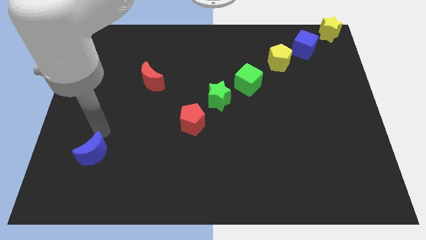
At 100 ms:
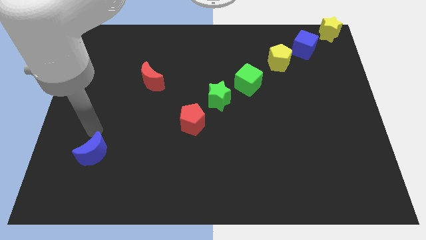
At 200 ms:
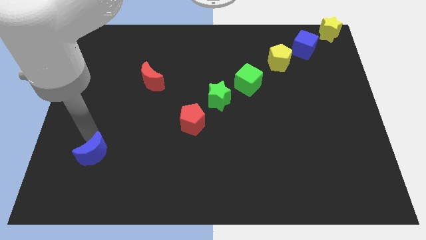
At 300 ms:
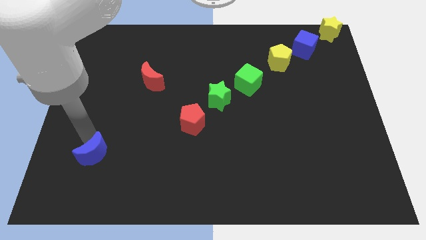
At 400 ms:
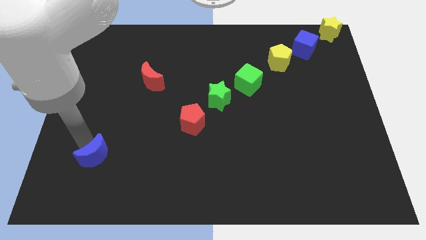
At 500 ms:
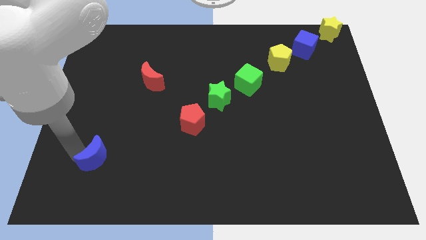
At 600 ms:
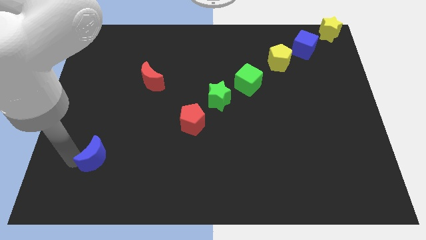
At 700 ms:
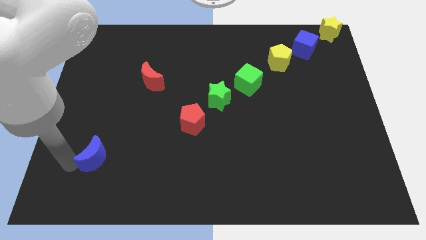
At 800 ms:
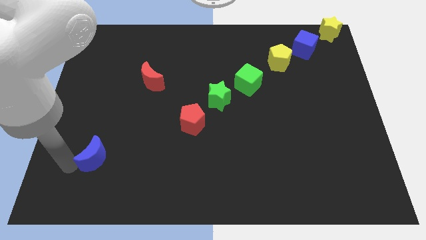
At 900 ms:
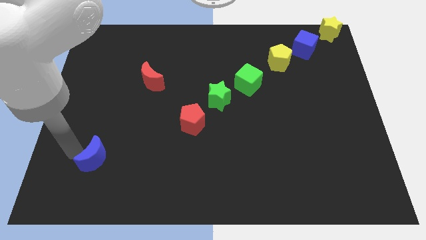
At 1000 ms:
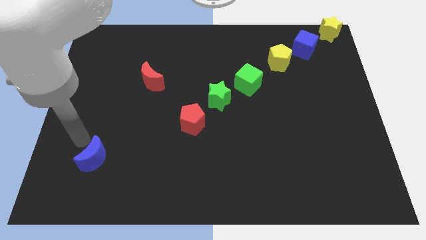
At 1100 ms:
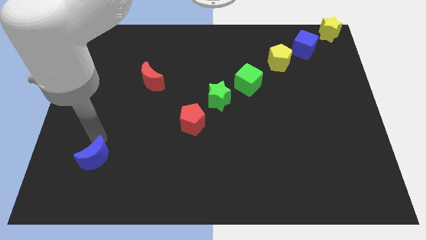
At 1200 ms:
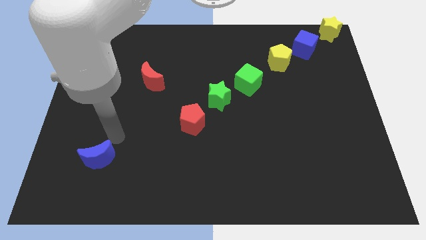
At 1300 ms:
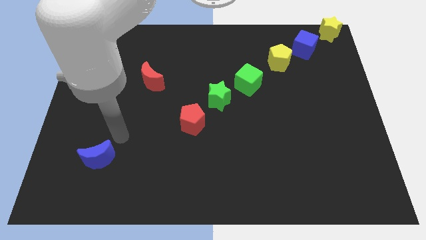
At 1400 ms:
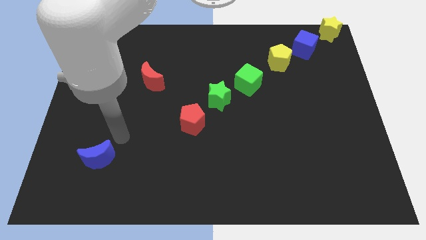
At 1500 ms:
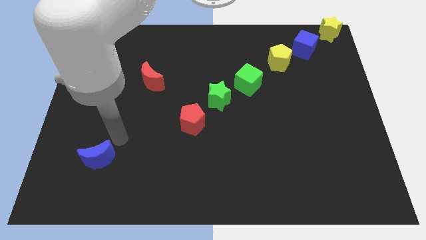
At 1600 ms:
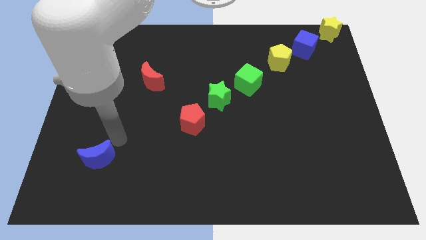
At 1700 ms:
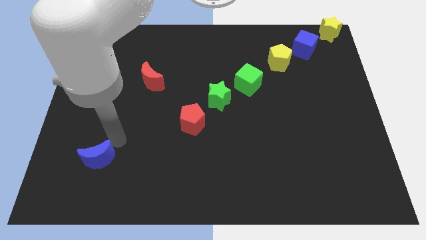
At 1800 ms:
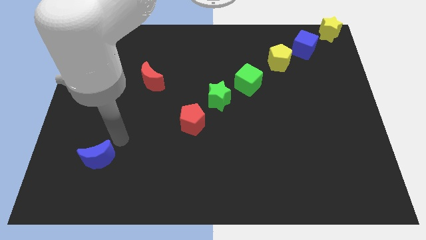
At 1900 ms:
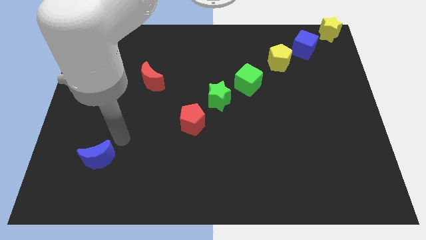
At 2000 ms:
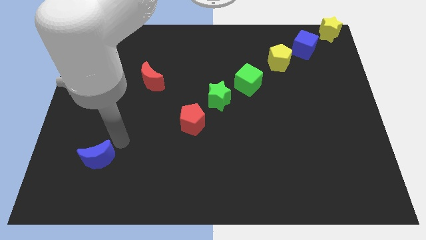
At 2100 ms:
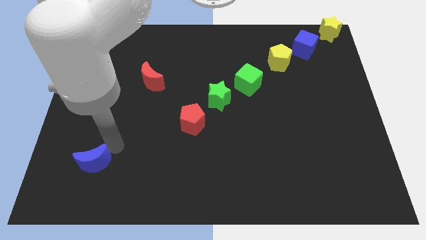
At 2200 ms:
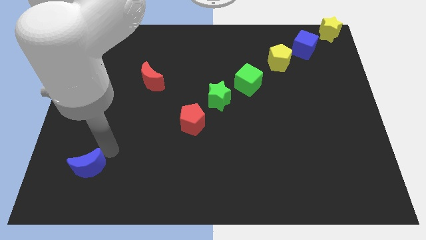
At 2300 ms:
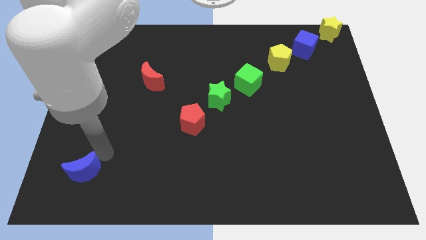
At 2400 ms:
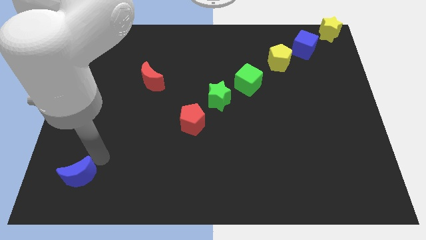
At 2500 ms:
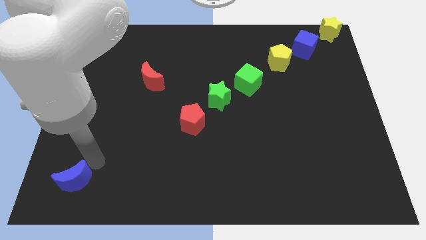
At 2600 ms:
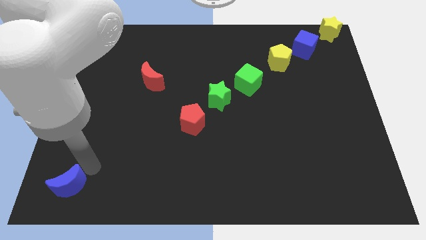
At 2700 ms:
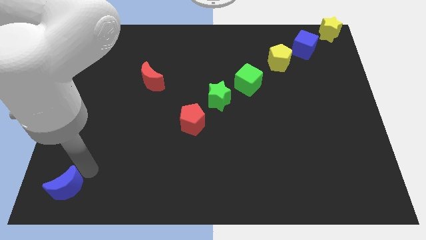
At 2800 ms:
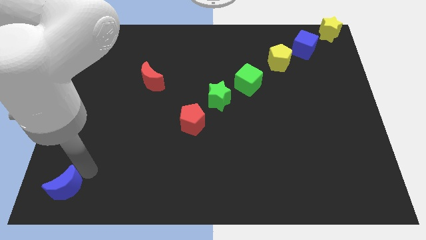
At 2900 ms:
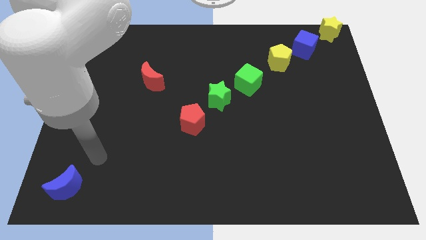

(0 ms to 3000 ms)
push blue crescent towards bottom left

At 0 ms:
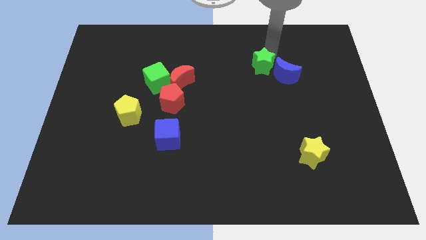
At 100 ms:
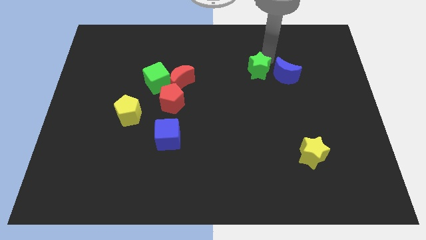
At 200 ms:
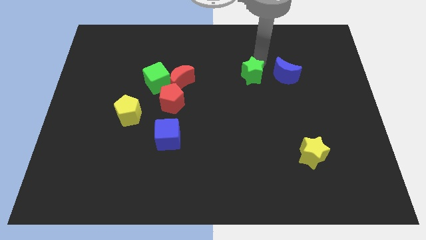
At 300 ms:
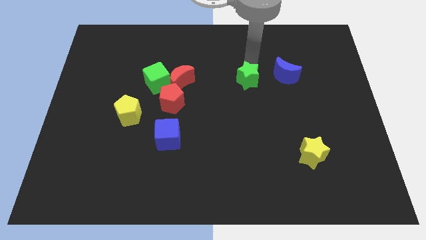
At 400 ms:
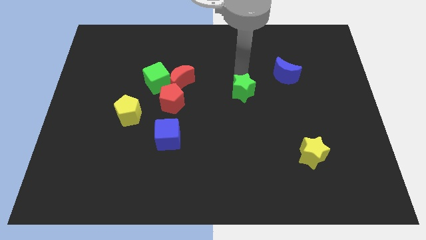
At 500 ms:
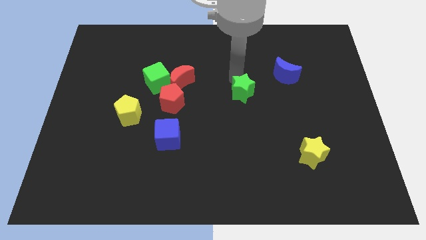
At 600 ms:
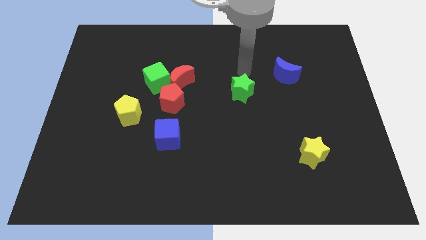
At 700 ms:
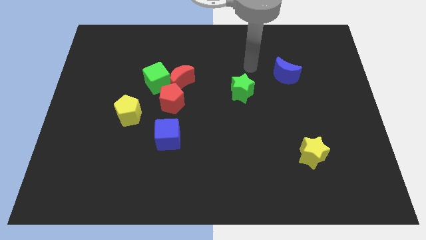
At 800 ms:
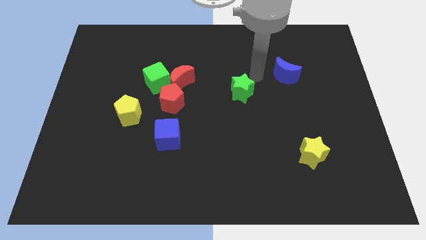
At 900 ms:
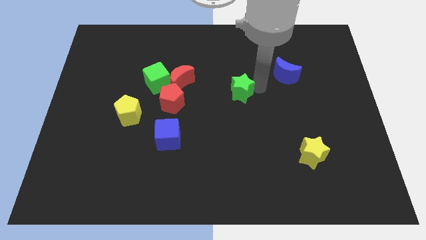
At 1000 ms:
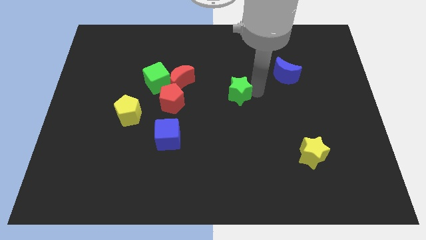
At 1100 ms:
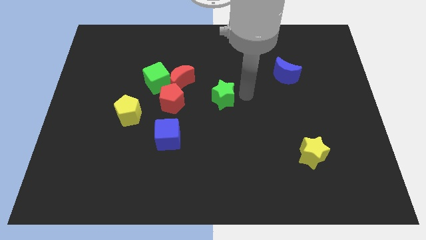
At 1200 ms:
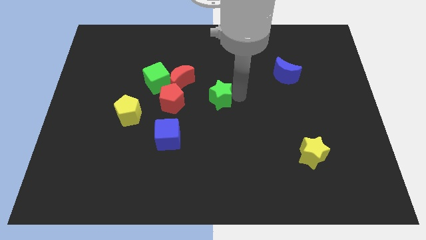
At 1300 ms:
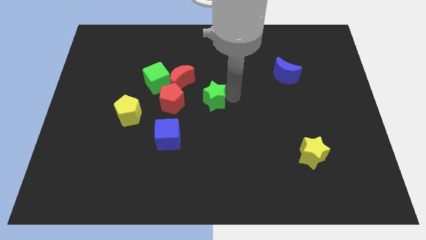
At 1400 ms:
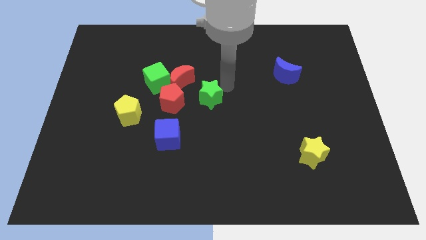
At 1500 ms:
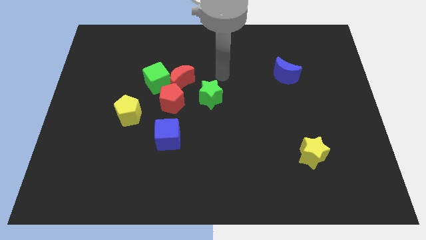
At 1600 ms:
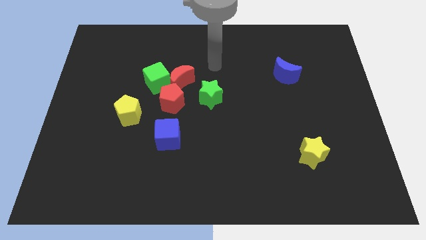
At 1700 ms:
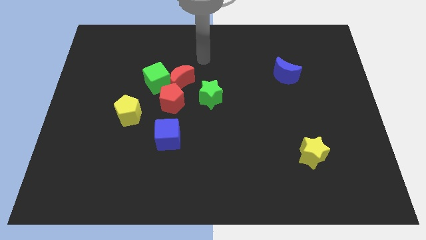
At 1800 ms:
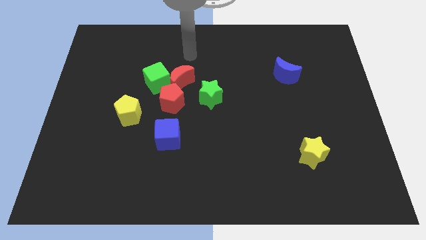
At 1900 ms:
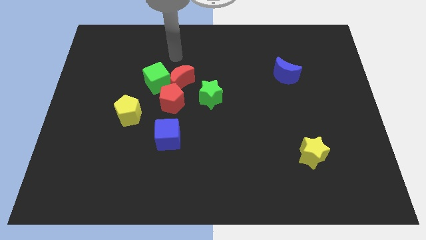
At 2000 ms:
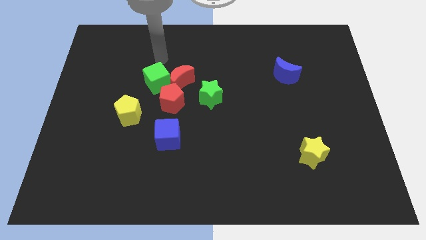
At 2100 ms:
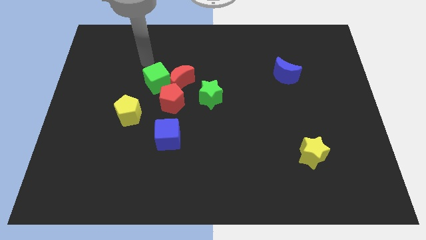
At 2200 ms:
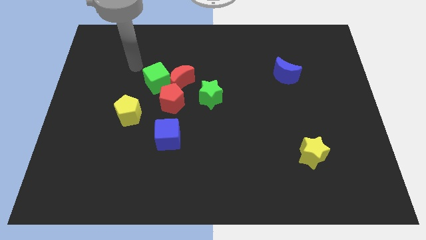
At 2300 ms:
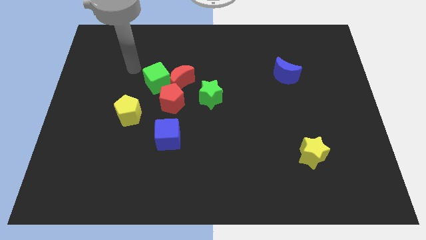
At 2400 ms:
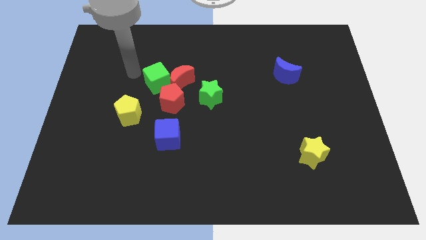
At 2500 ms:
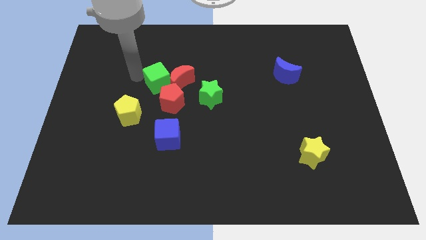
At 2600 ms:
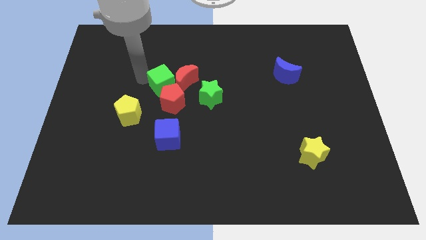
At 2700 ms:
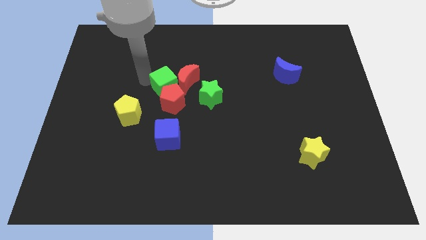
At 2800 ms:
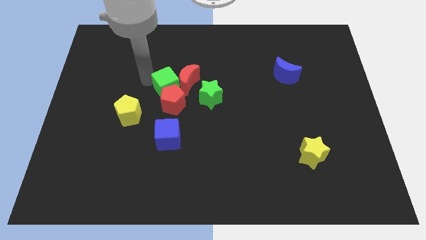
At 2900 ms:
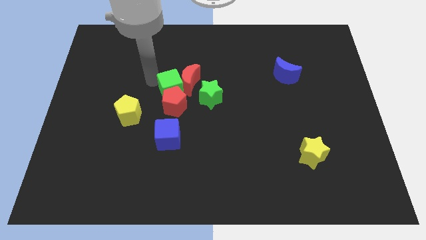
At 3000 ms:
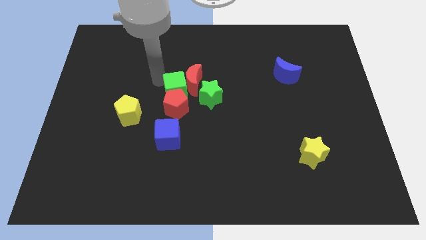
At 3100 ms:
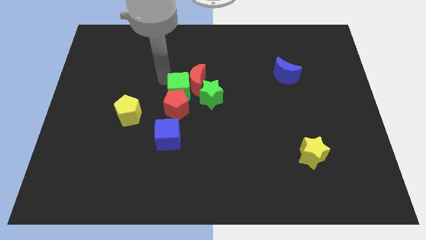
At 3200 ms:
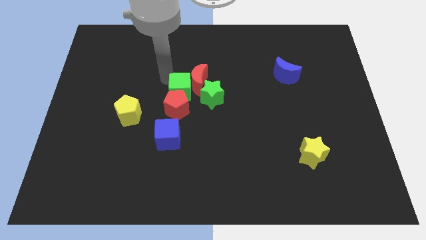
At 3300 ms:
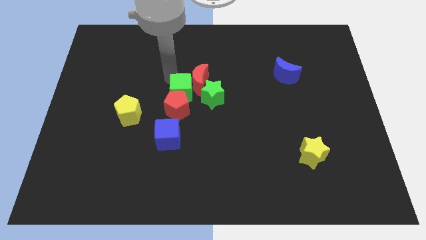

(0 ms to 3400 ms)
move the green cube above to the red pentagon

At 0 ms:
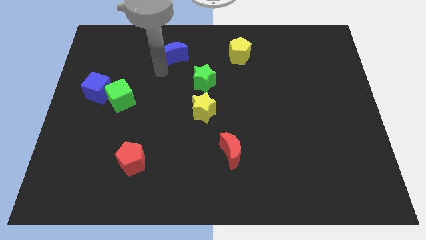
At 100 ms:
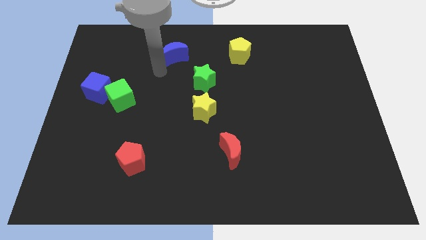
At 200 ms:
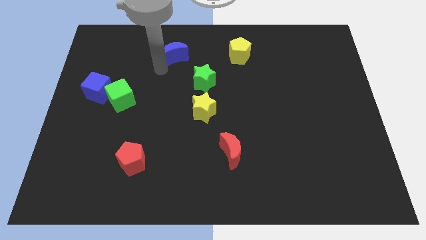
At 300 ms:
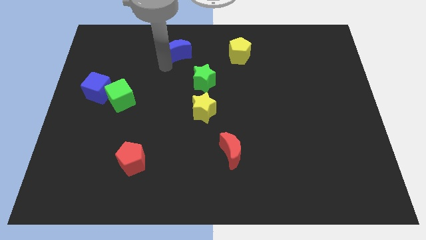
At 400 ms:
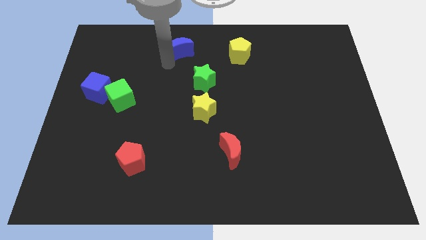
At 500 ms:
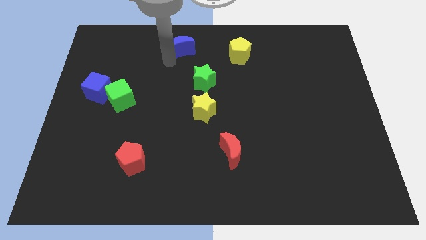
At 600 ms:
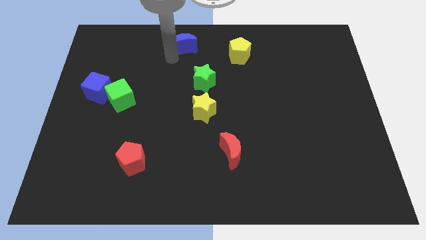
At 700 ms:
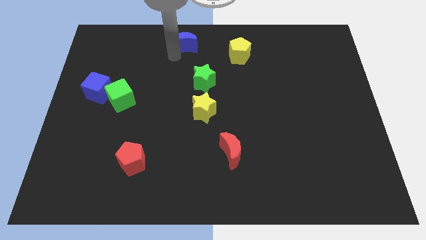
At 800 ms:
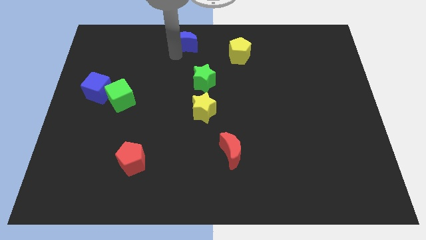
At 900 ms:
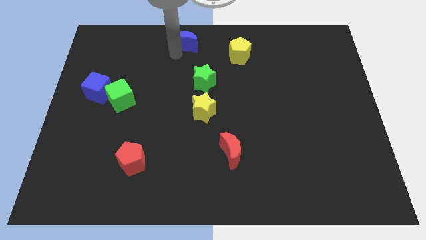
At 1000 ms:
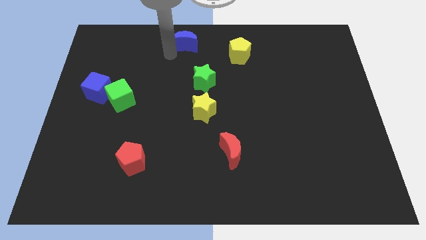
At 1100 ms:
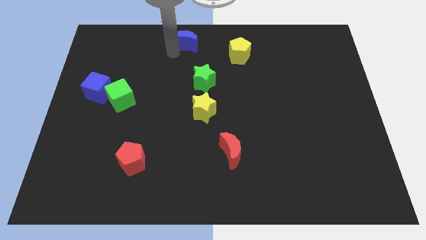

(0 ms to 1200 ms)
push blue crescent to the top center of the board

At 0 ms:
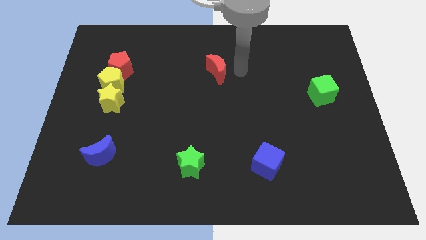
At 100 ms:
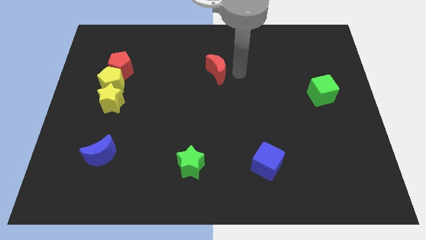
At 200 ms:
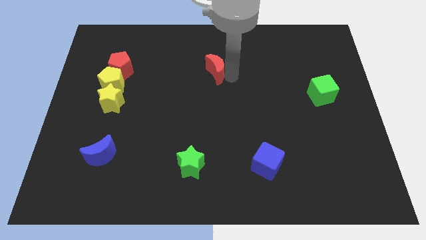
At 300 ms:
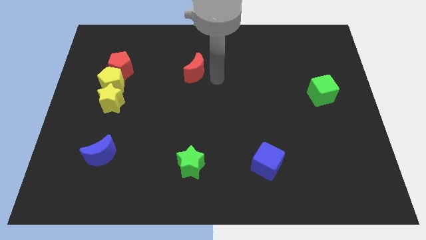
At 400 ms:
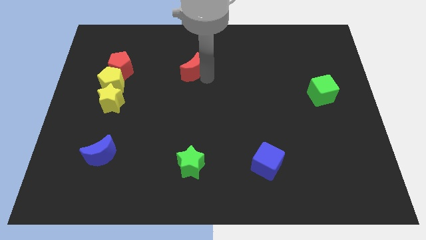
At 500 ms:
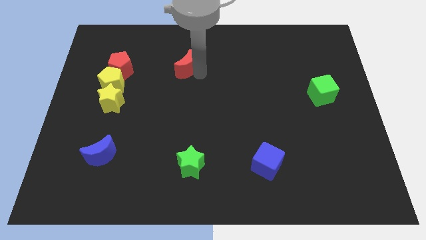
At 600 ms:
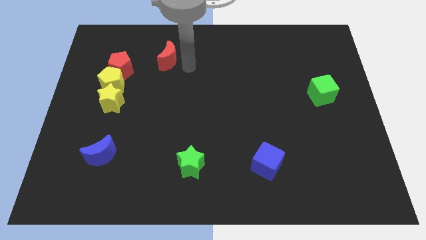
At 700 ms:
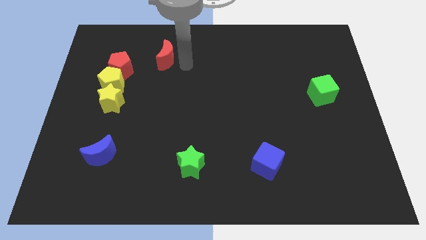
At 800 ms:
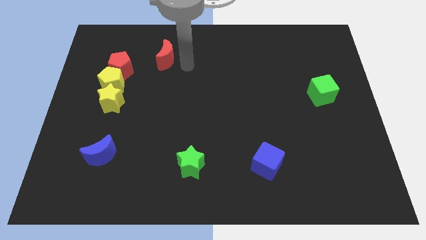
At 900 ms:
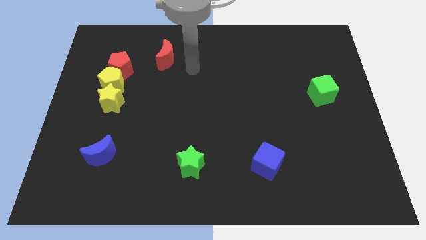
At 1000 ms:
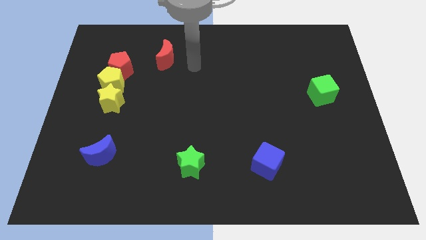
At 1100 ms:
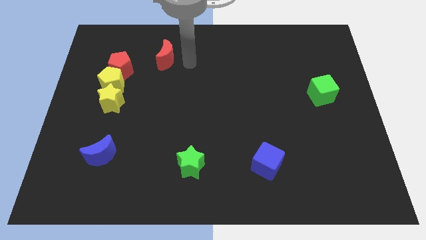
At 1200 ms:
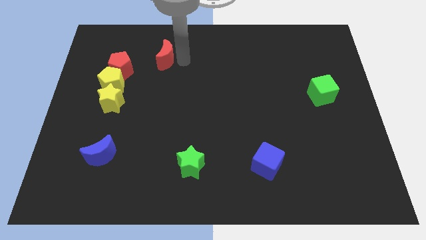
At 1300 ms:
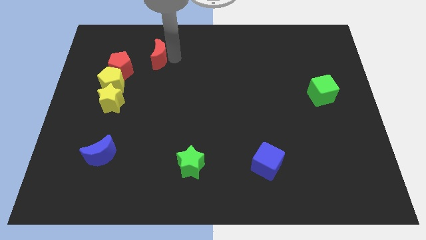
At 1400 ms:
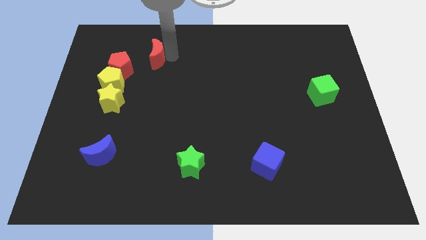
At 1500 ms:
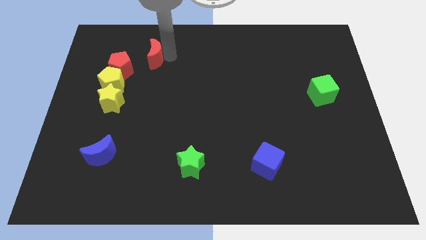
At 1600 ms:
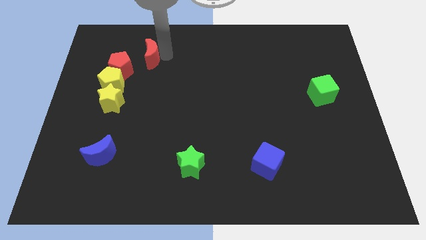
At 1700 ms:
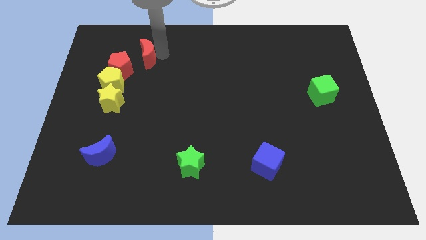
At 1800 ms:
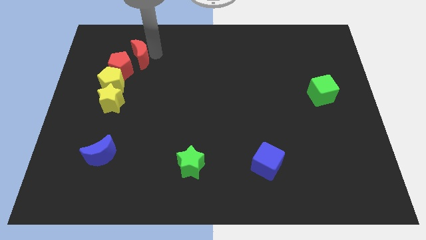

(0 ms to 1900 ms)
place the red crescent at top right side of the red pentagon
